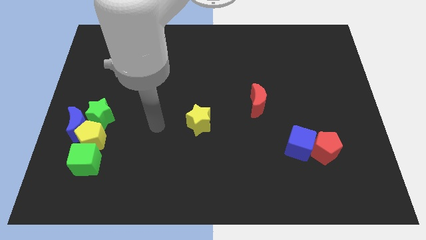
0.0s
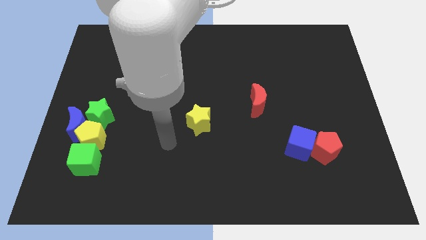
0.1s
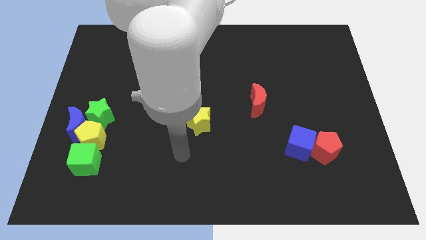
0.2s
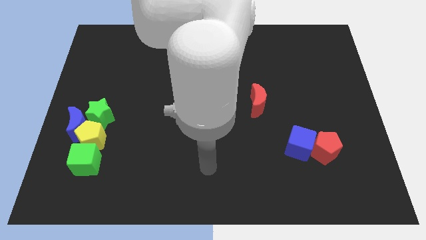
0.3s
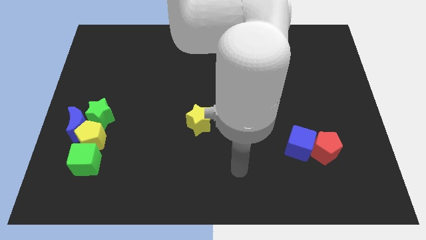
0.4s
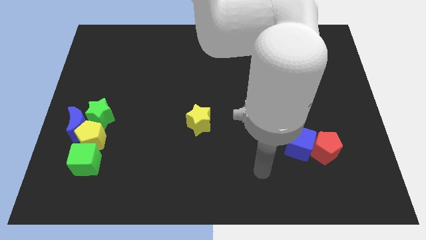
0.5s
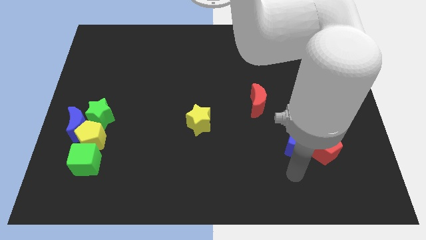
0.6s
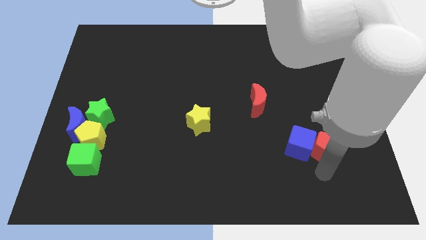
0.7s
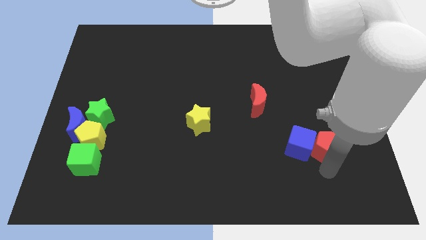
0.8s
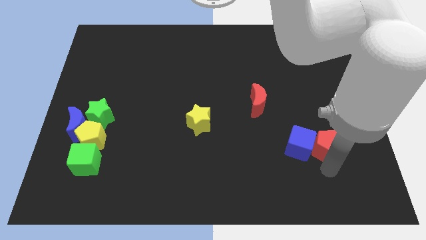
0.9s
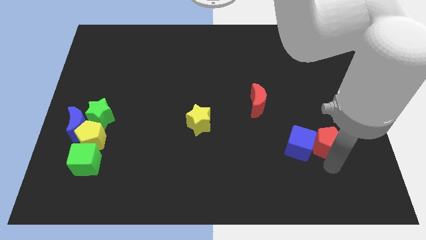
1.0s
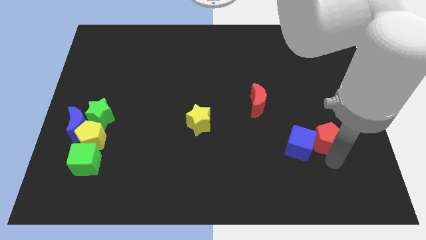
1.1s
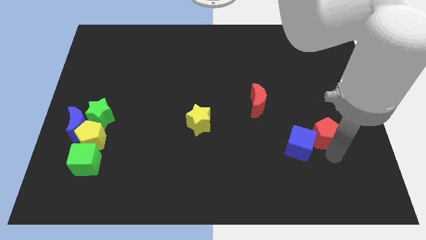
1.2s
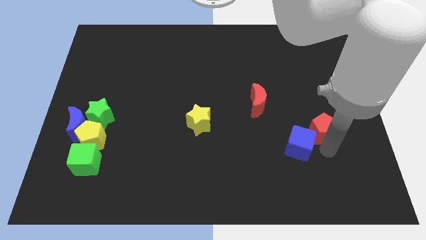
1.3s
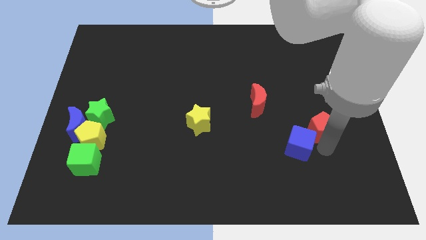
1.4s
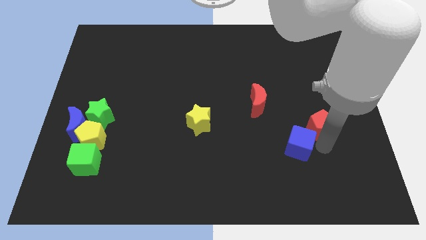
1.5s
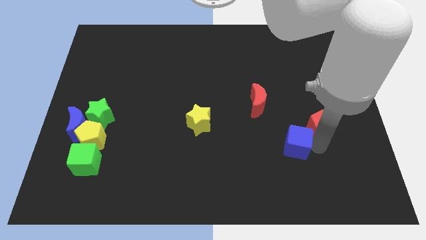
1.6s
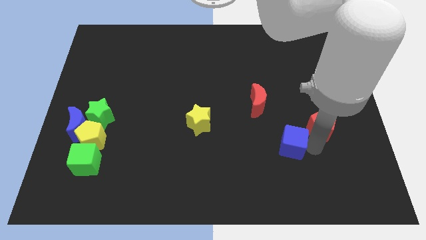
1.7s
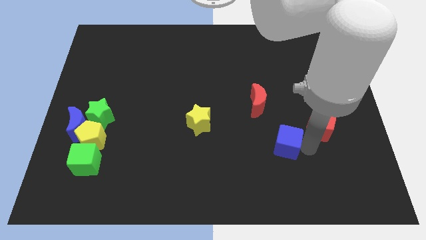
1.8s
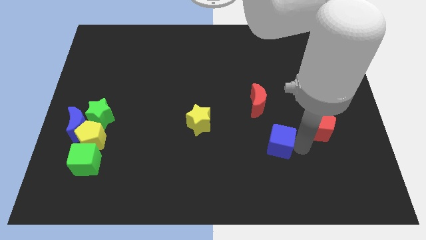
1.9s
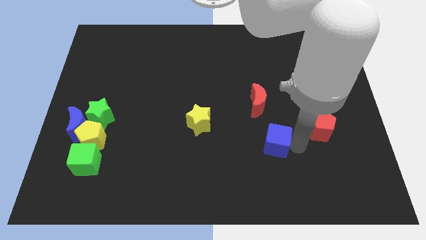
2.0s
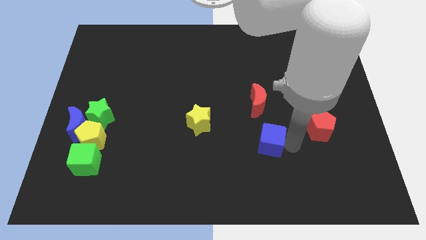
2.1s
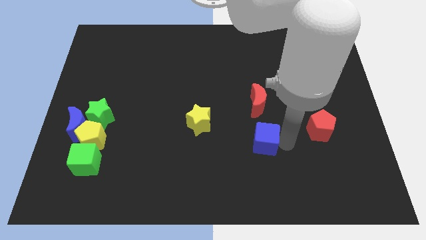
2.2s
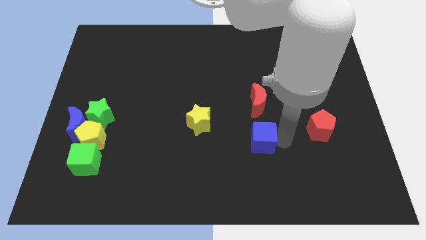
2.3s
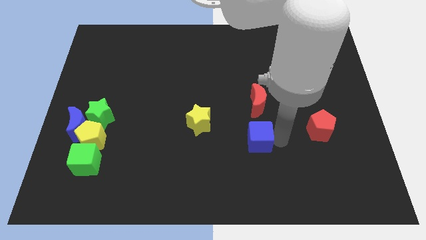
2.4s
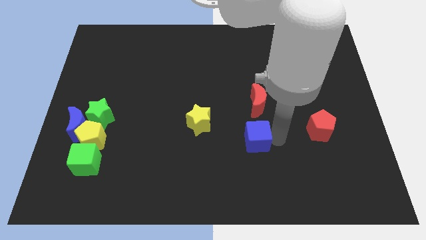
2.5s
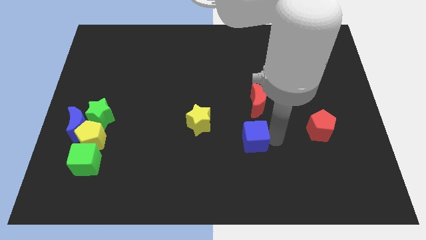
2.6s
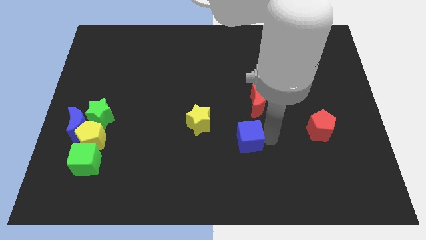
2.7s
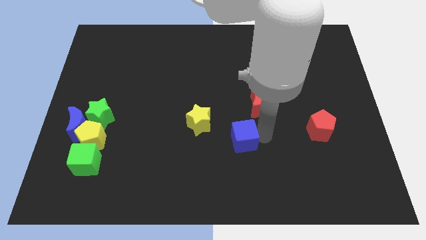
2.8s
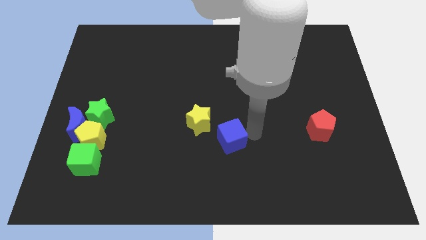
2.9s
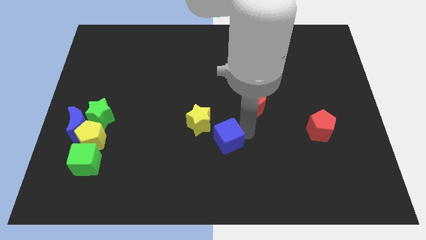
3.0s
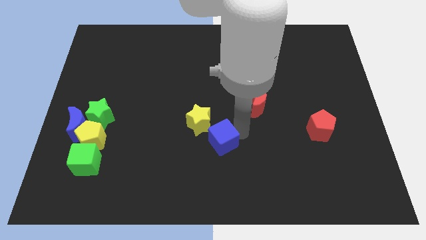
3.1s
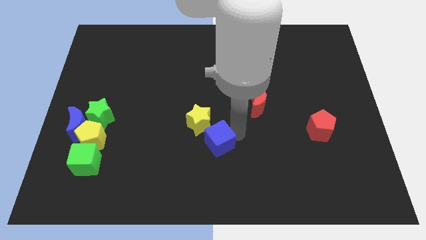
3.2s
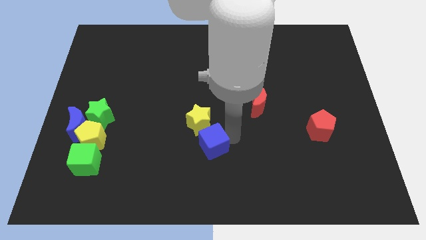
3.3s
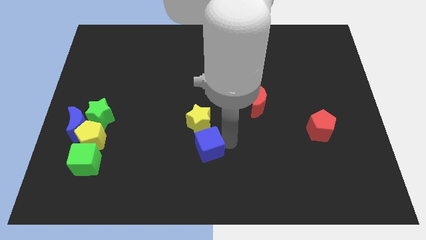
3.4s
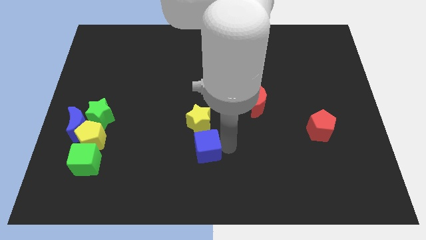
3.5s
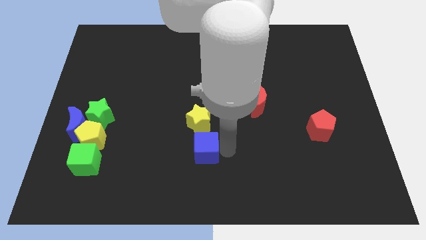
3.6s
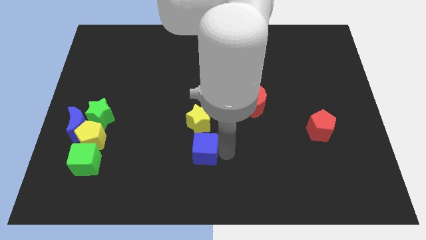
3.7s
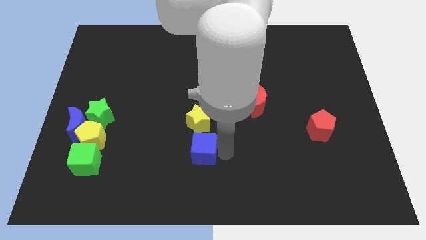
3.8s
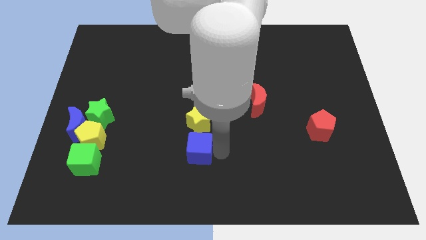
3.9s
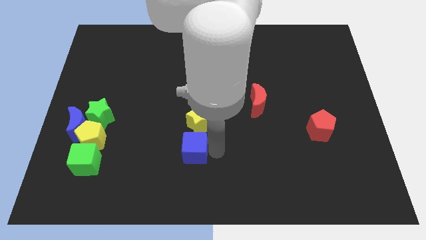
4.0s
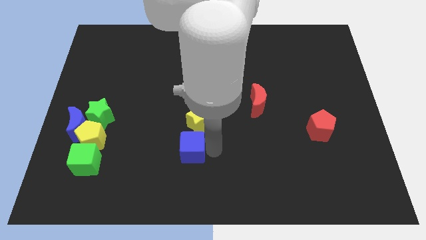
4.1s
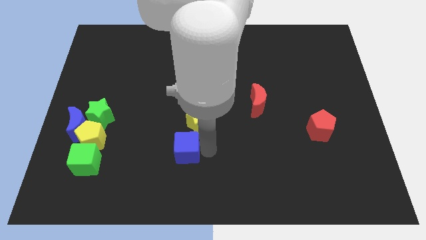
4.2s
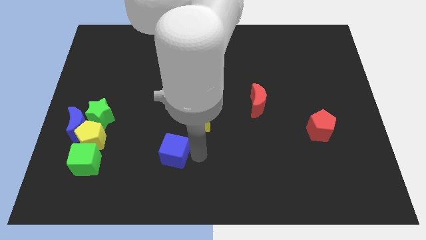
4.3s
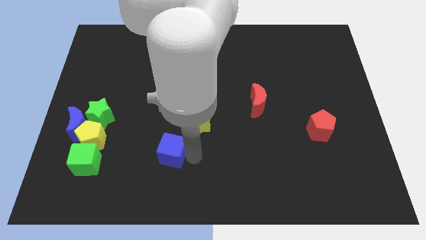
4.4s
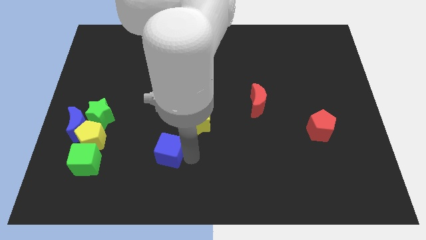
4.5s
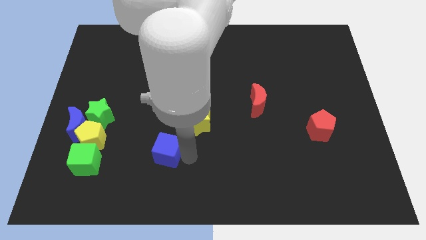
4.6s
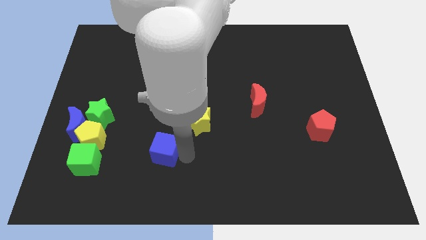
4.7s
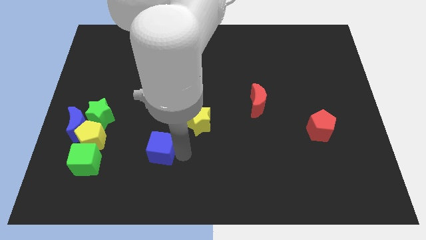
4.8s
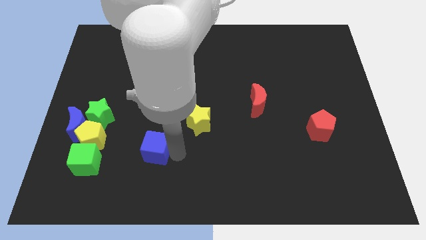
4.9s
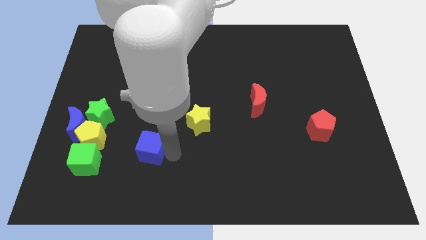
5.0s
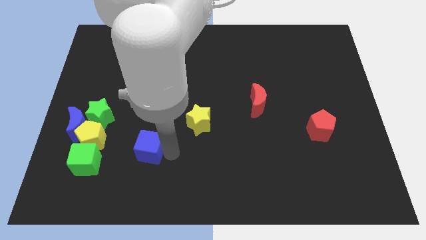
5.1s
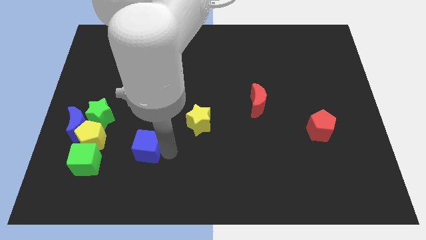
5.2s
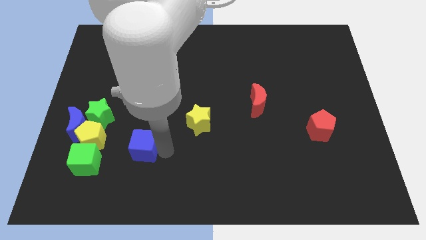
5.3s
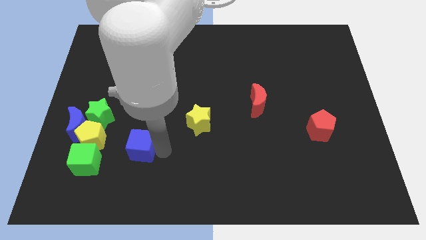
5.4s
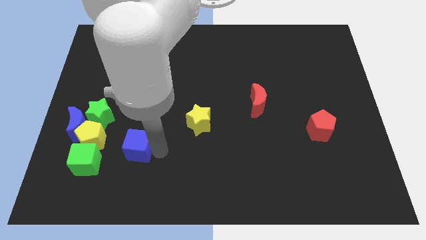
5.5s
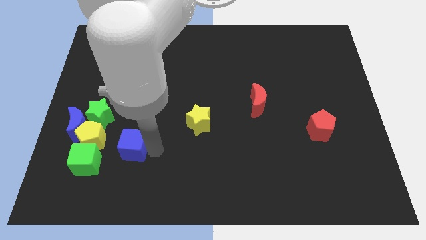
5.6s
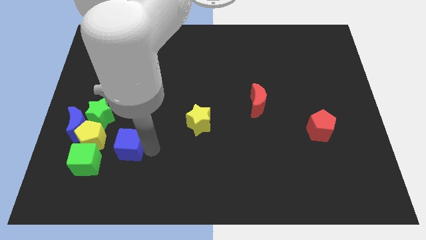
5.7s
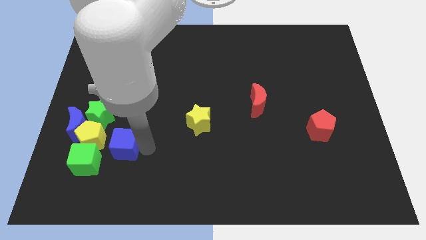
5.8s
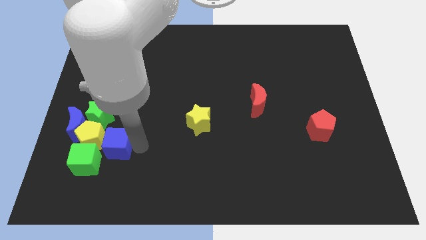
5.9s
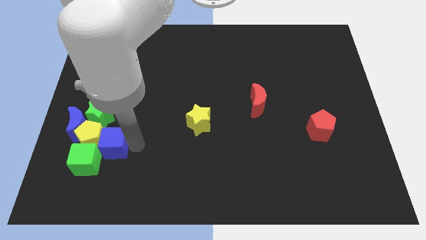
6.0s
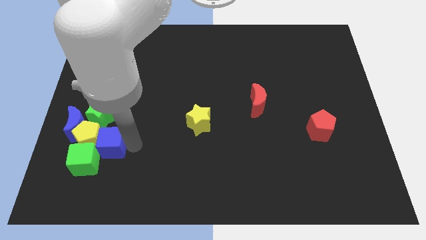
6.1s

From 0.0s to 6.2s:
put the blue cube to the yellow pentagon

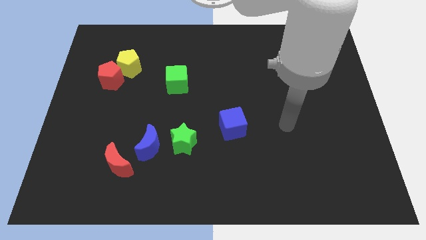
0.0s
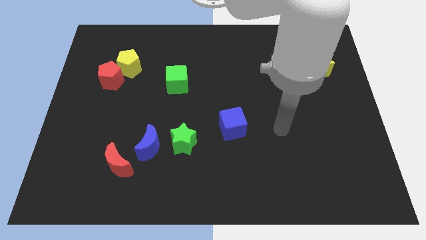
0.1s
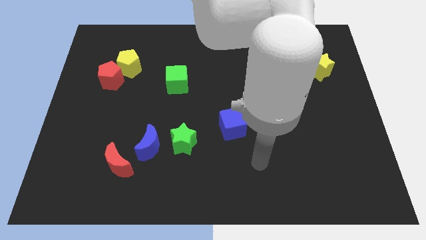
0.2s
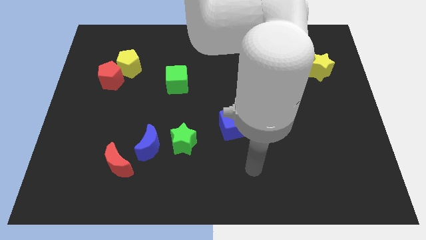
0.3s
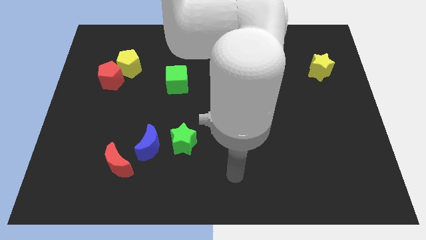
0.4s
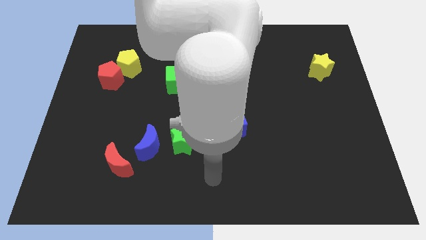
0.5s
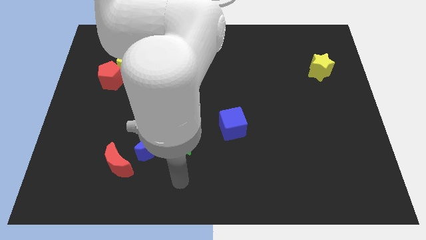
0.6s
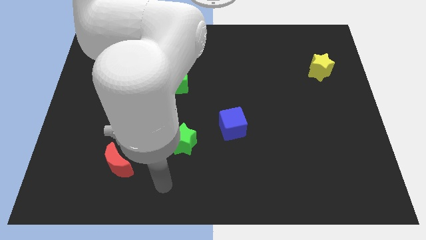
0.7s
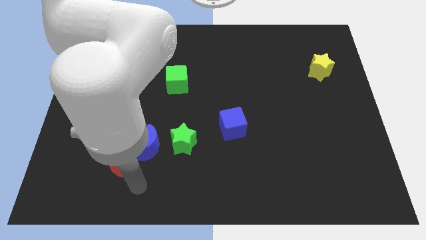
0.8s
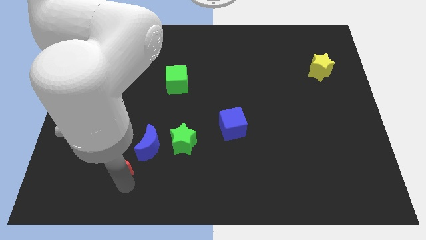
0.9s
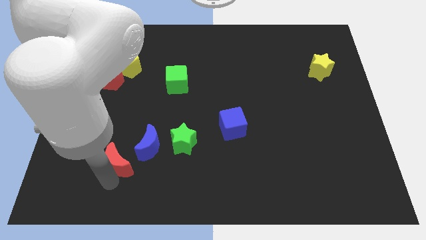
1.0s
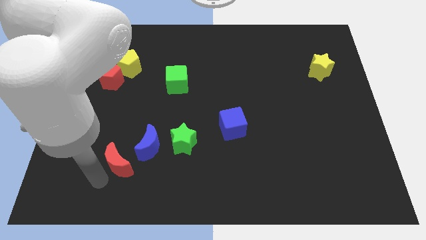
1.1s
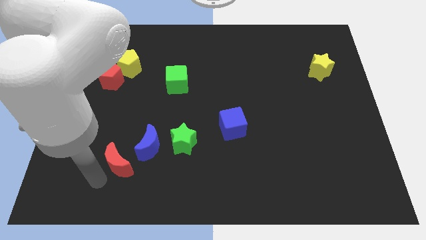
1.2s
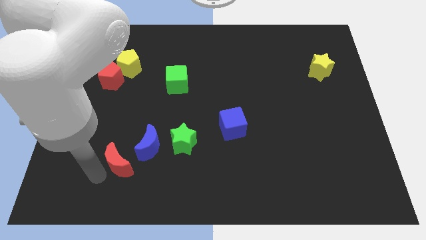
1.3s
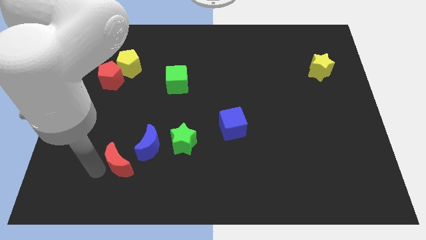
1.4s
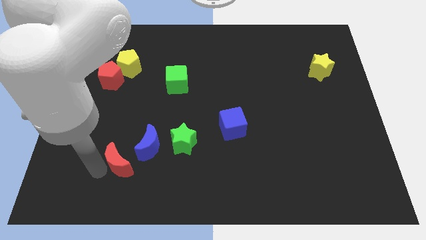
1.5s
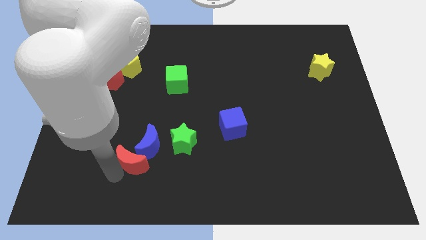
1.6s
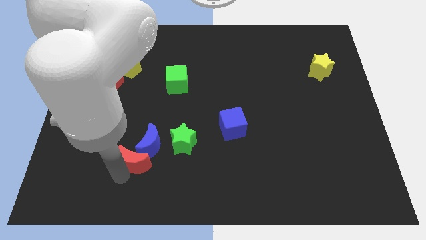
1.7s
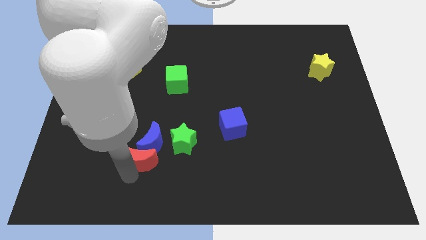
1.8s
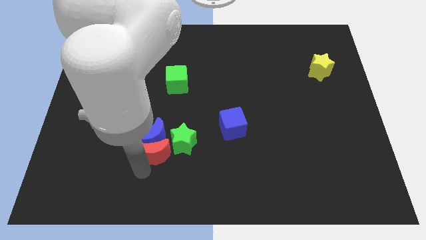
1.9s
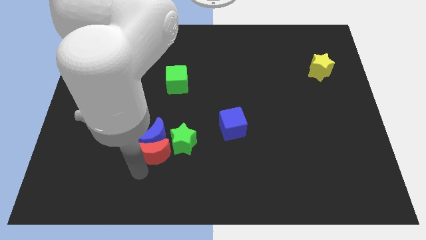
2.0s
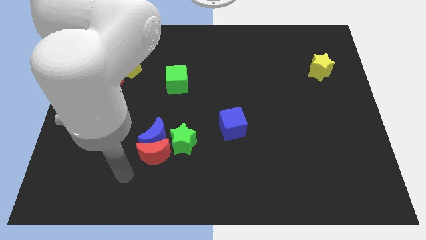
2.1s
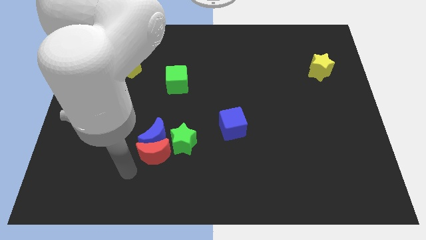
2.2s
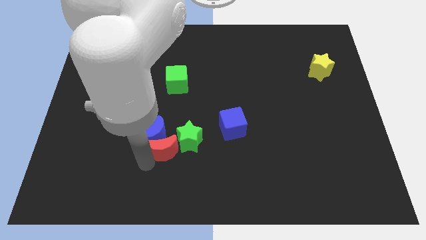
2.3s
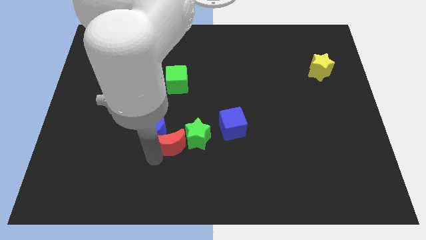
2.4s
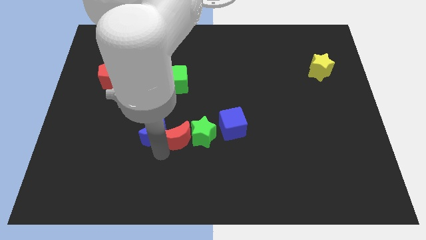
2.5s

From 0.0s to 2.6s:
slide the red moon close to the green star
